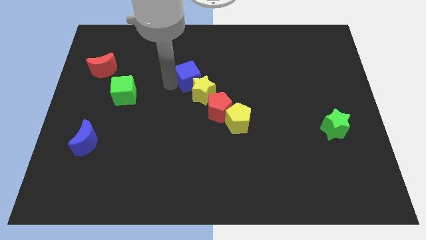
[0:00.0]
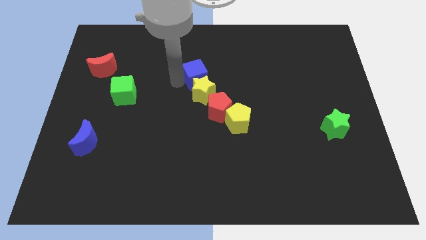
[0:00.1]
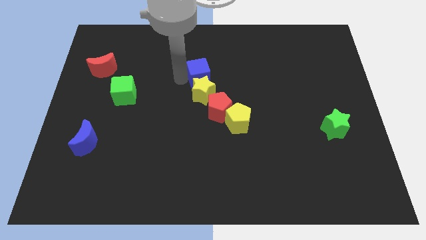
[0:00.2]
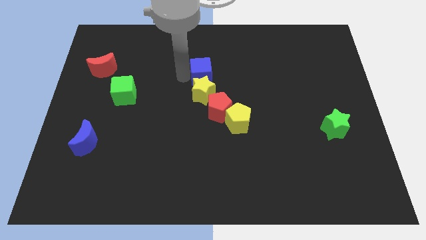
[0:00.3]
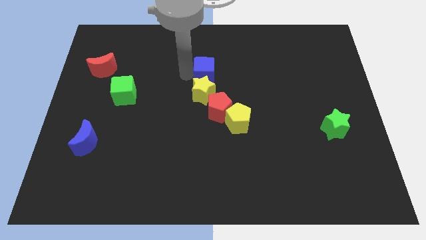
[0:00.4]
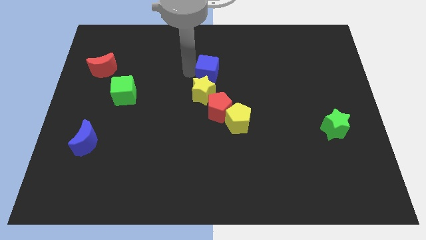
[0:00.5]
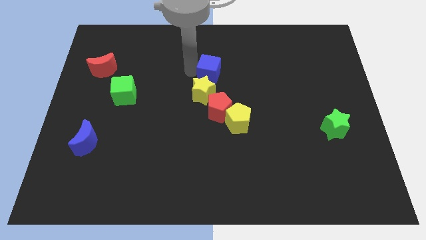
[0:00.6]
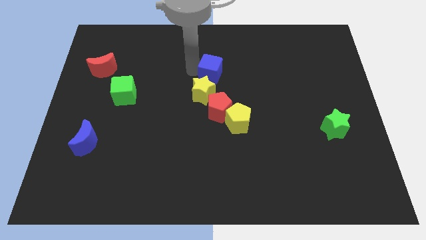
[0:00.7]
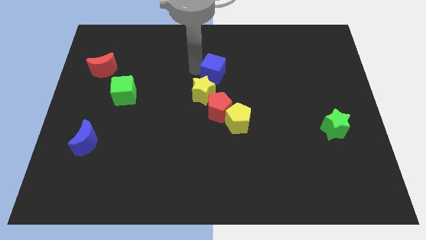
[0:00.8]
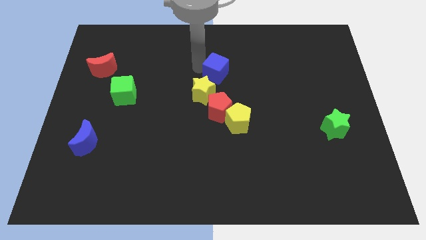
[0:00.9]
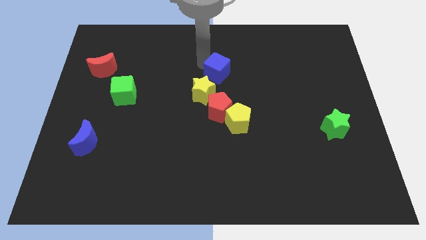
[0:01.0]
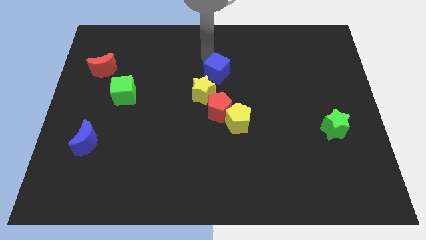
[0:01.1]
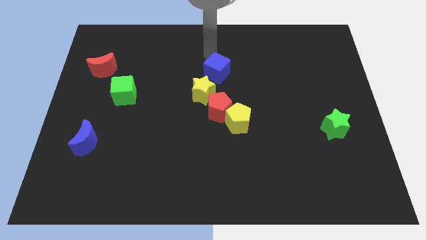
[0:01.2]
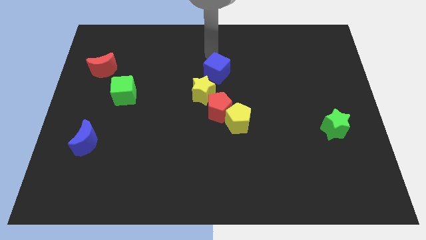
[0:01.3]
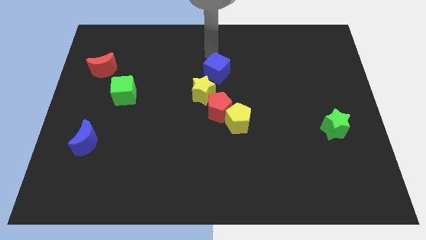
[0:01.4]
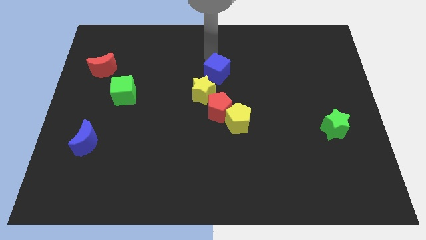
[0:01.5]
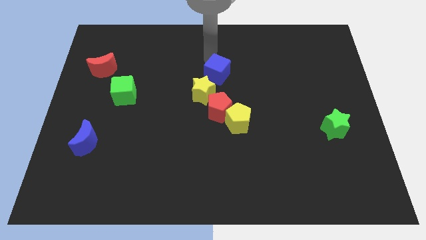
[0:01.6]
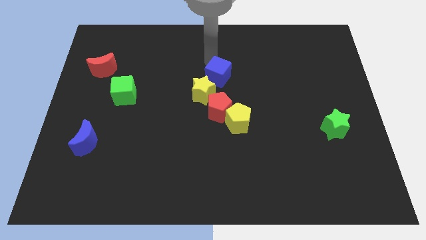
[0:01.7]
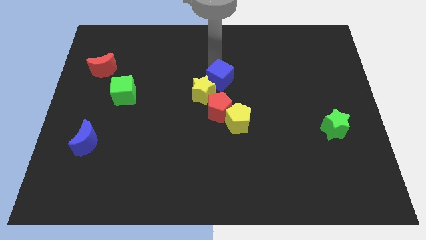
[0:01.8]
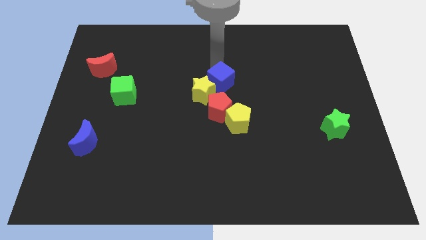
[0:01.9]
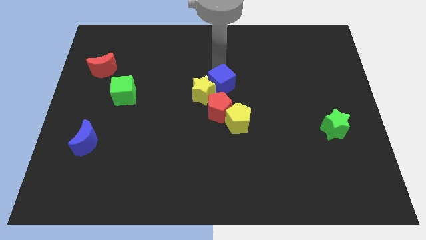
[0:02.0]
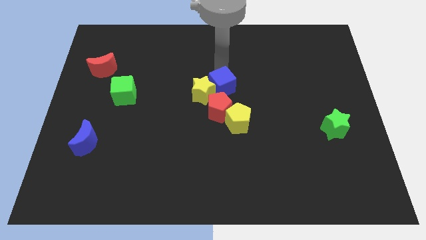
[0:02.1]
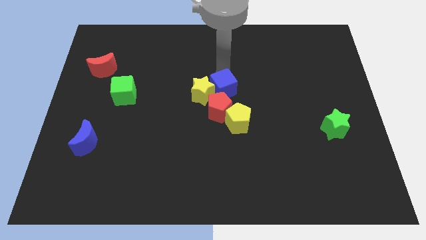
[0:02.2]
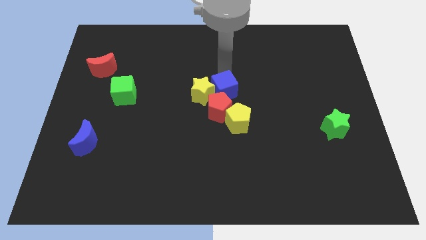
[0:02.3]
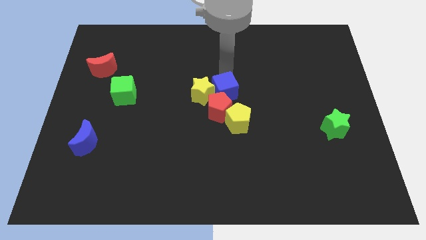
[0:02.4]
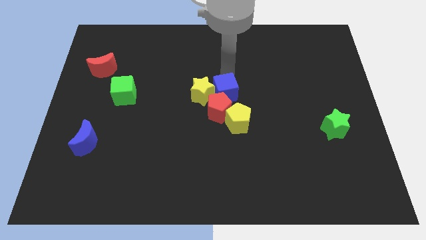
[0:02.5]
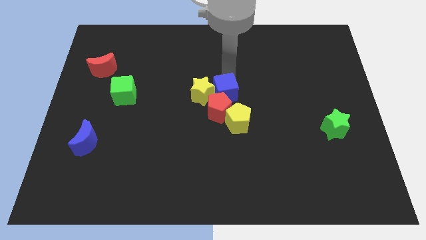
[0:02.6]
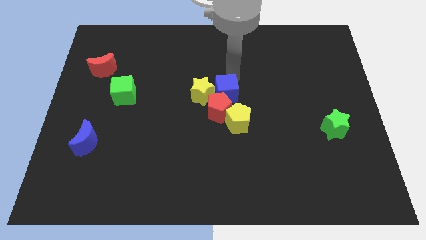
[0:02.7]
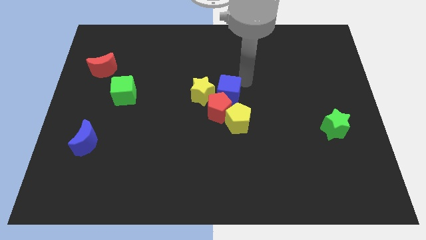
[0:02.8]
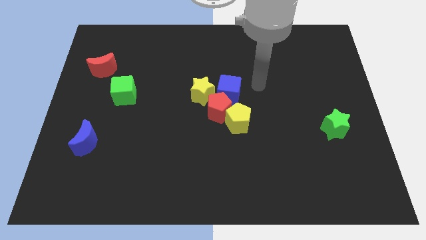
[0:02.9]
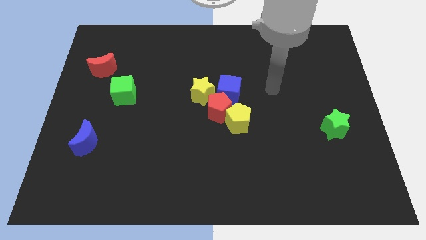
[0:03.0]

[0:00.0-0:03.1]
place blue cube above red pentagon

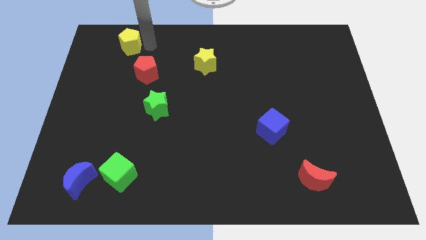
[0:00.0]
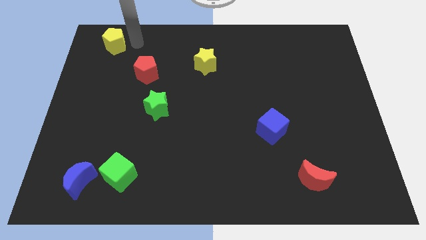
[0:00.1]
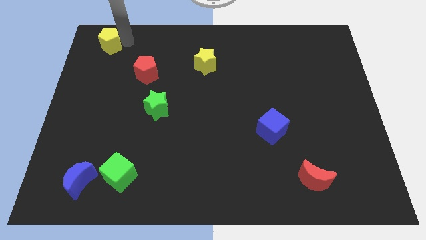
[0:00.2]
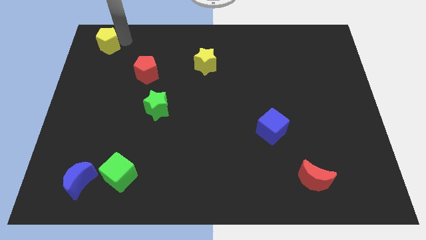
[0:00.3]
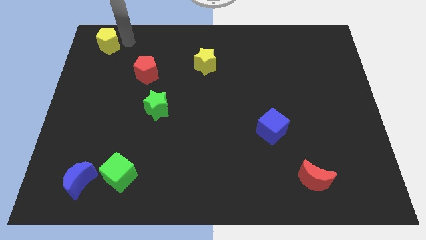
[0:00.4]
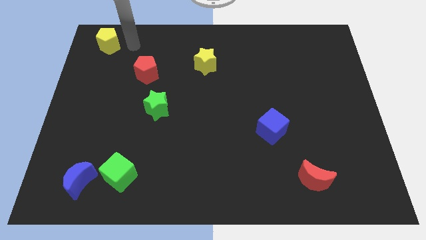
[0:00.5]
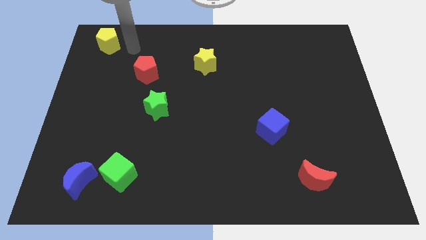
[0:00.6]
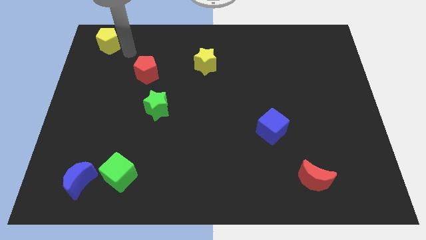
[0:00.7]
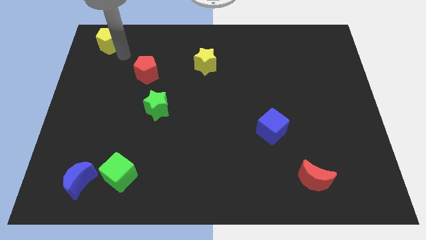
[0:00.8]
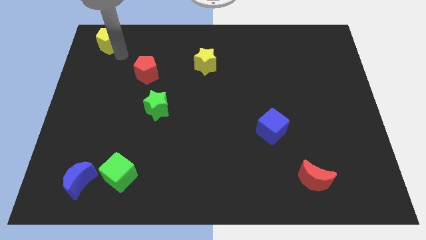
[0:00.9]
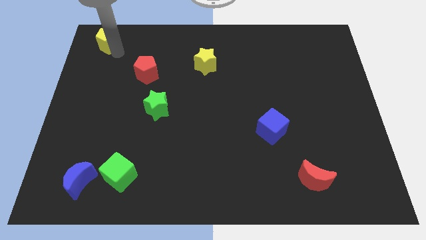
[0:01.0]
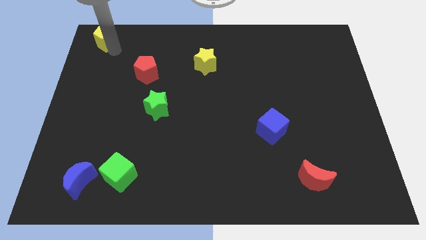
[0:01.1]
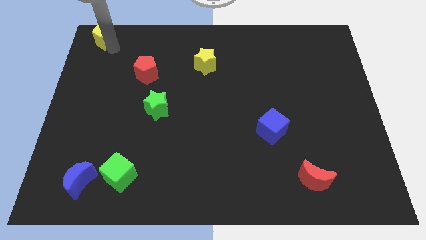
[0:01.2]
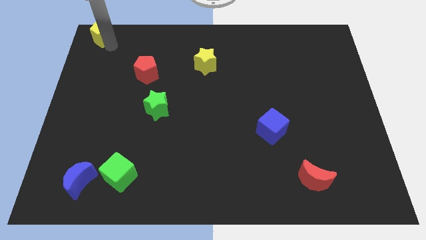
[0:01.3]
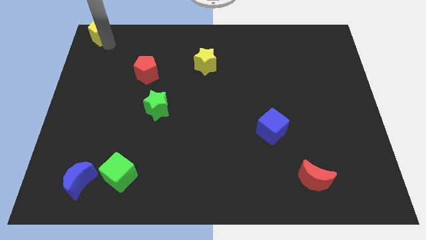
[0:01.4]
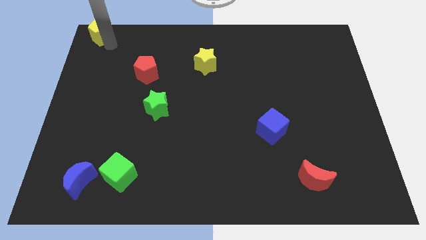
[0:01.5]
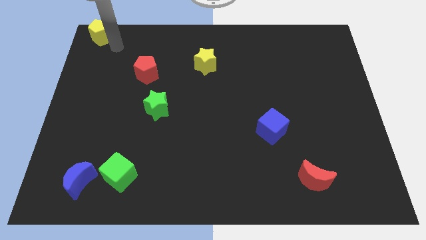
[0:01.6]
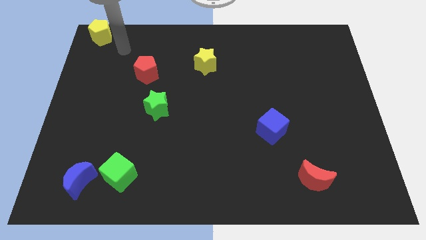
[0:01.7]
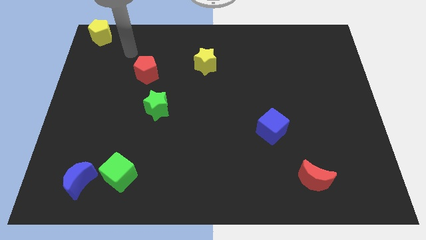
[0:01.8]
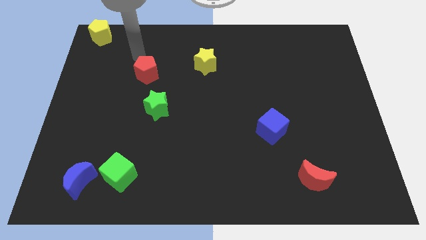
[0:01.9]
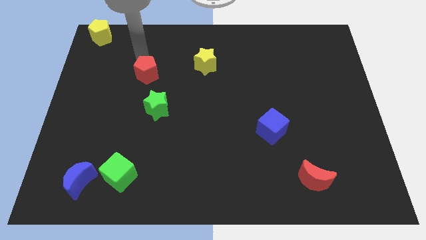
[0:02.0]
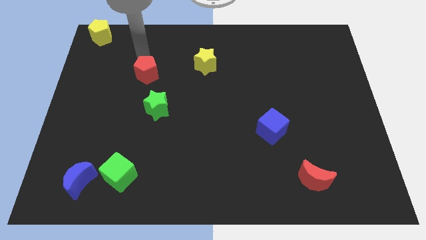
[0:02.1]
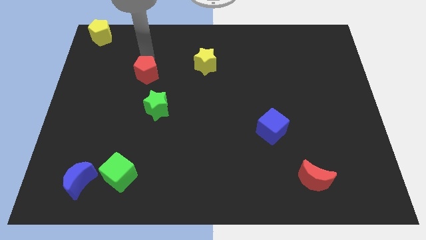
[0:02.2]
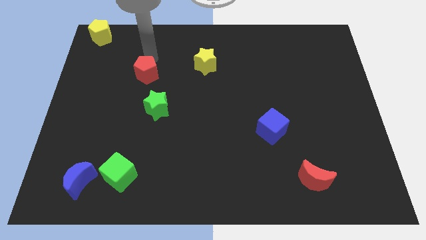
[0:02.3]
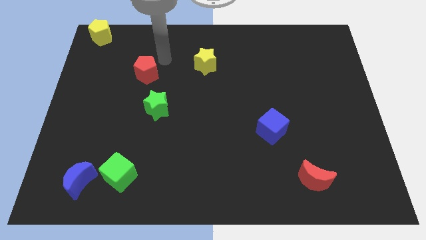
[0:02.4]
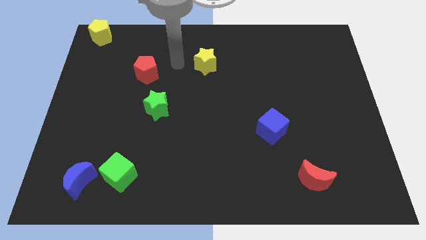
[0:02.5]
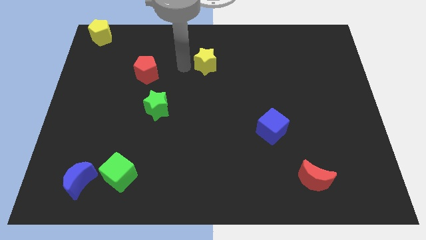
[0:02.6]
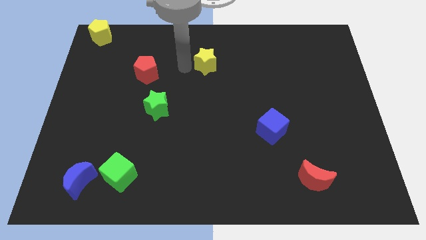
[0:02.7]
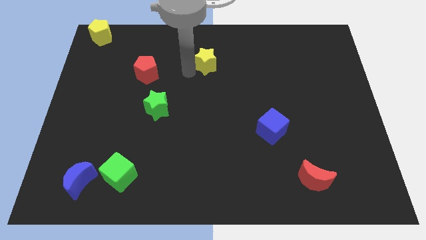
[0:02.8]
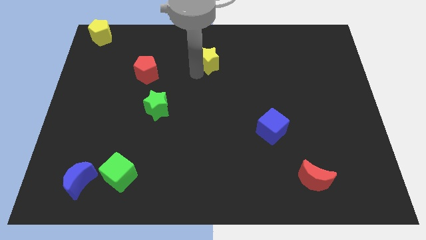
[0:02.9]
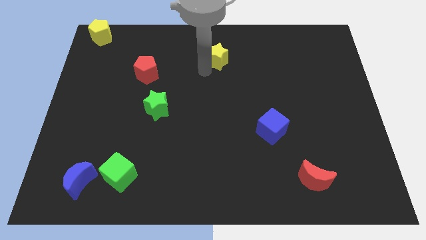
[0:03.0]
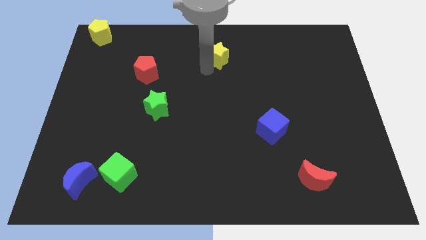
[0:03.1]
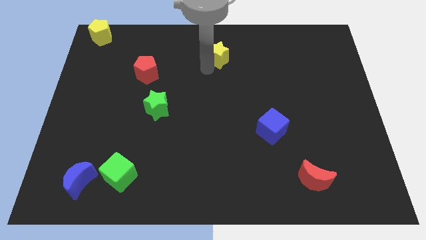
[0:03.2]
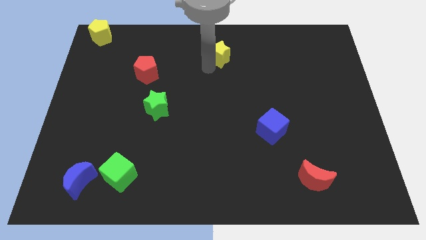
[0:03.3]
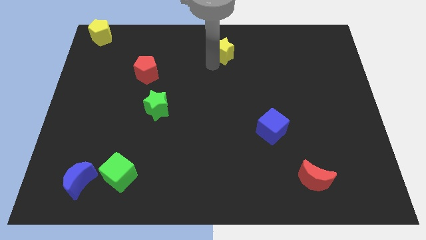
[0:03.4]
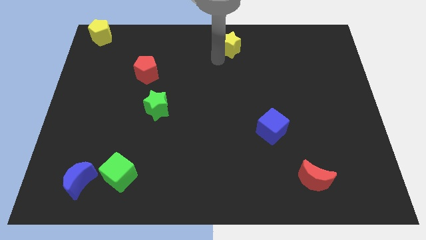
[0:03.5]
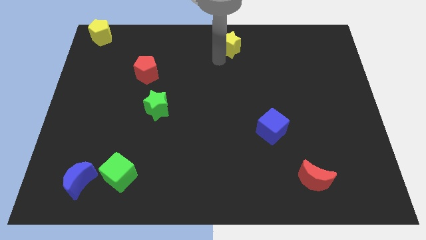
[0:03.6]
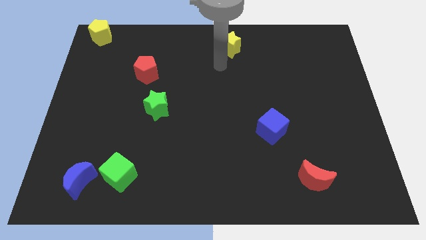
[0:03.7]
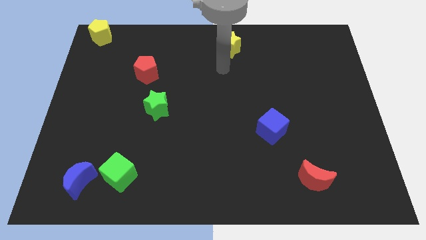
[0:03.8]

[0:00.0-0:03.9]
push the yellow pentagon towards the top left corner of the board

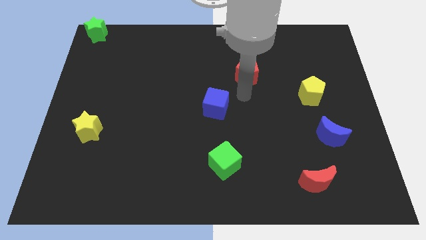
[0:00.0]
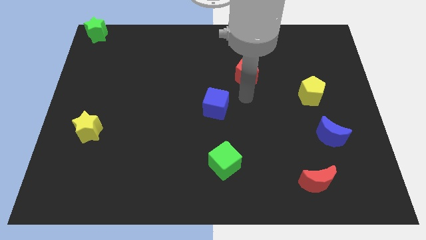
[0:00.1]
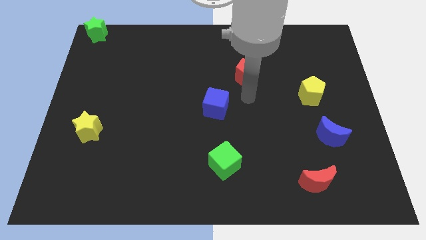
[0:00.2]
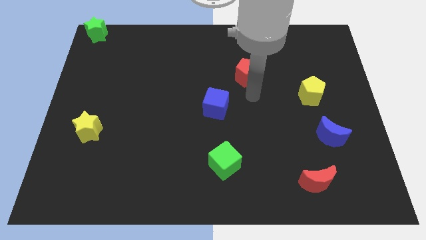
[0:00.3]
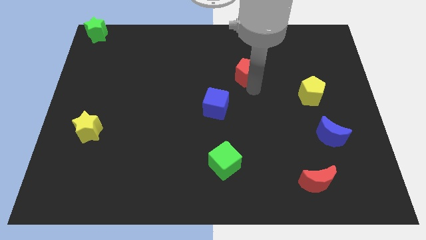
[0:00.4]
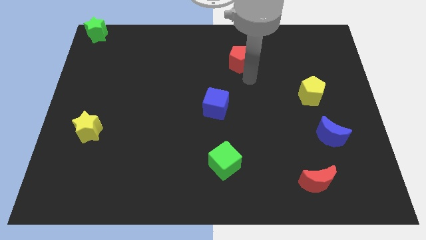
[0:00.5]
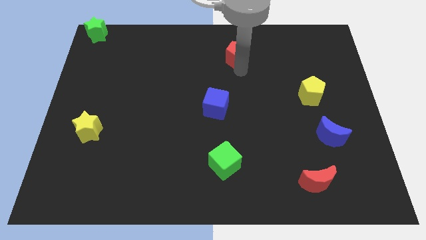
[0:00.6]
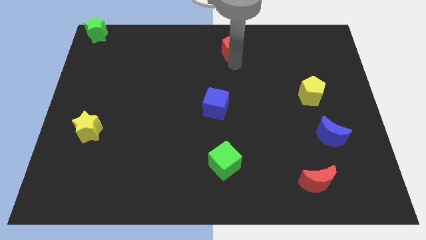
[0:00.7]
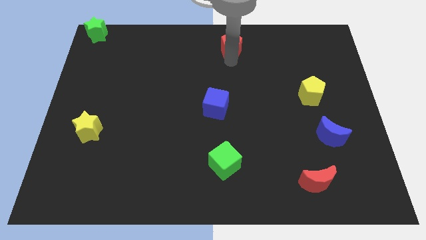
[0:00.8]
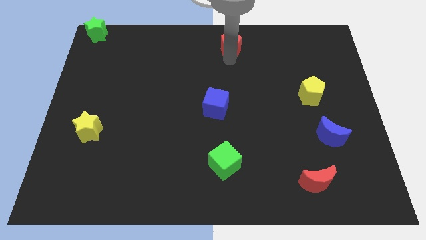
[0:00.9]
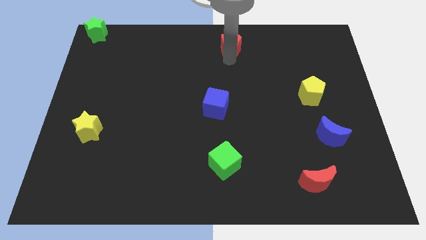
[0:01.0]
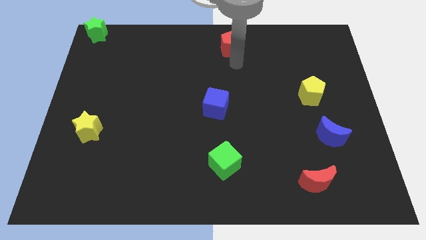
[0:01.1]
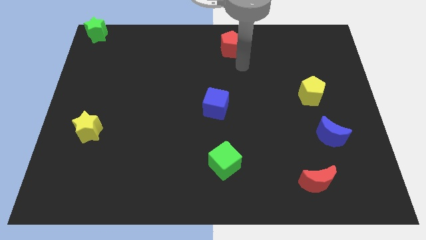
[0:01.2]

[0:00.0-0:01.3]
slide red pentagon to center top

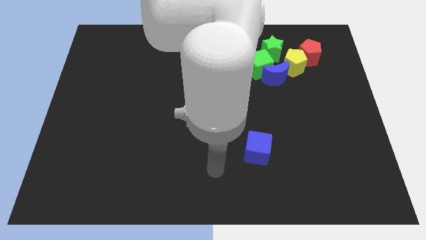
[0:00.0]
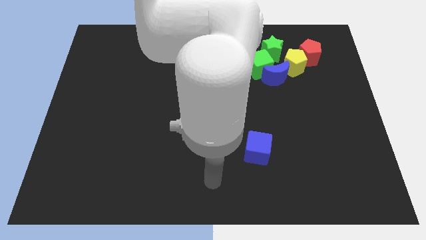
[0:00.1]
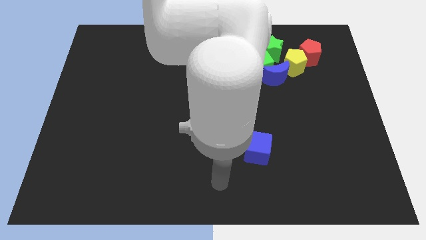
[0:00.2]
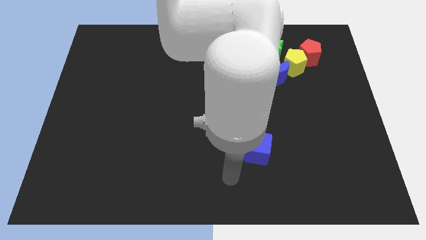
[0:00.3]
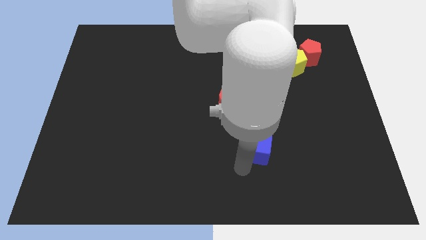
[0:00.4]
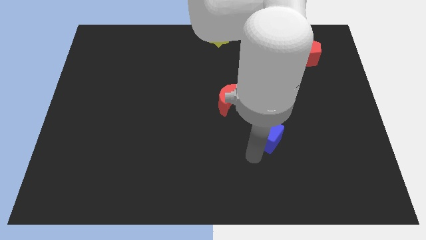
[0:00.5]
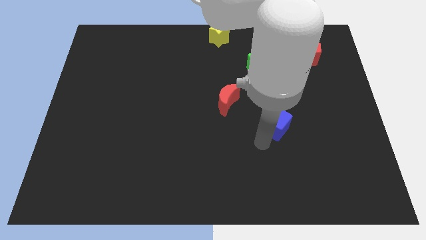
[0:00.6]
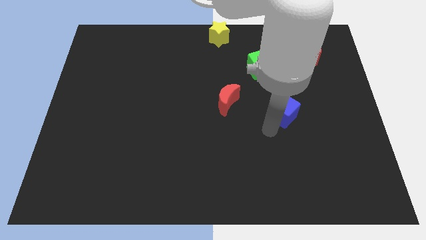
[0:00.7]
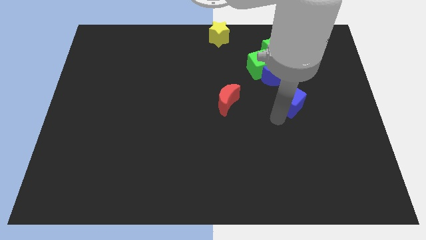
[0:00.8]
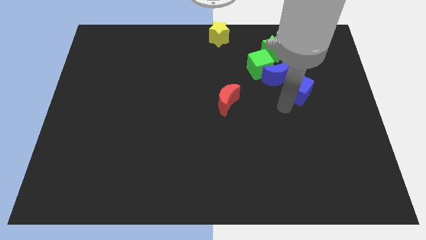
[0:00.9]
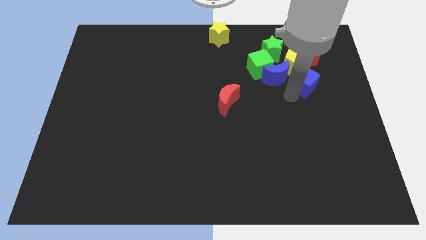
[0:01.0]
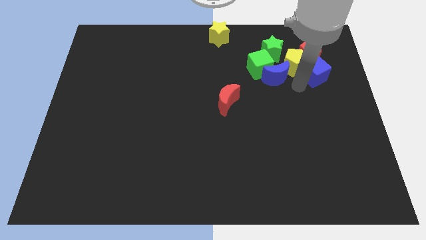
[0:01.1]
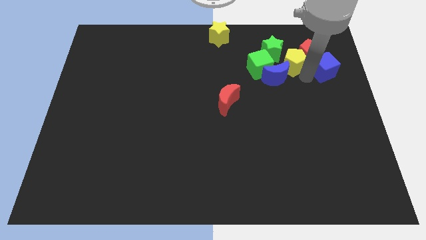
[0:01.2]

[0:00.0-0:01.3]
take the blue cube close to the red pentagon
